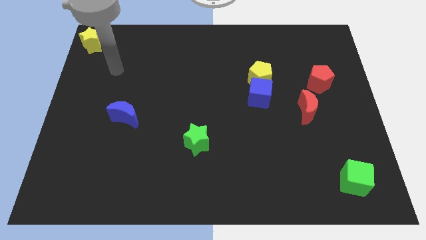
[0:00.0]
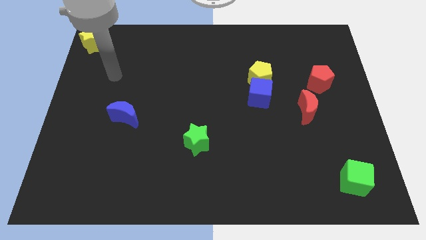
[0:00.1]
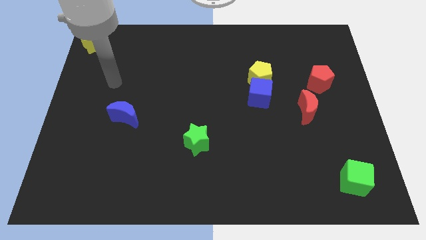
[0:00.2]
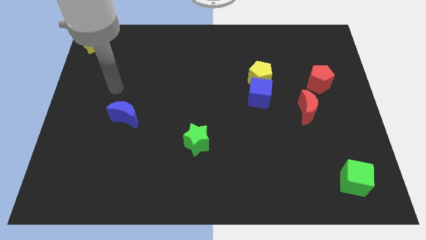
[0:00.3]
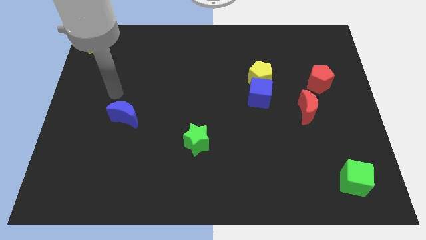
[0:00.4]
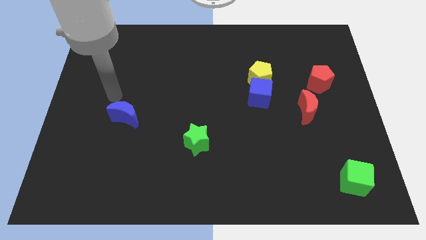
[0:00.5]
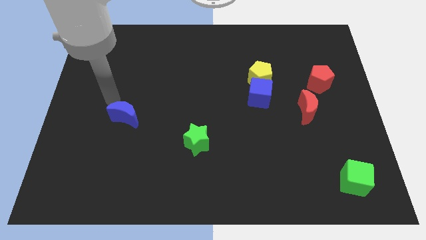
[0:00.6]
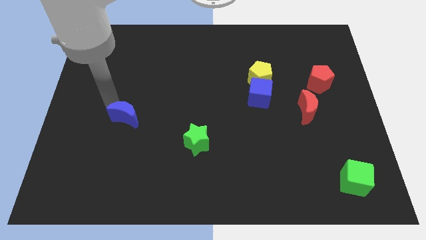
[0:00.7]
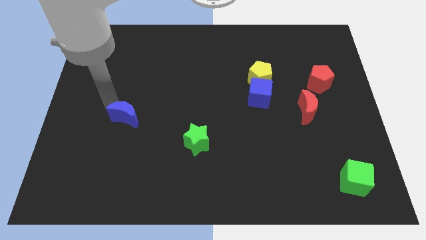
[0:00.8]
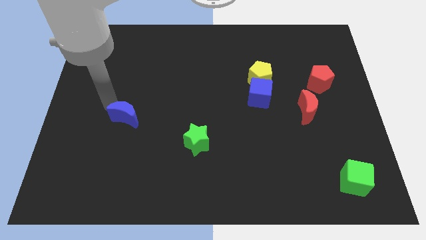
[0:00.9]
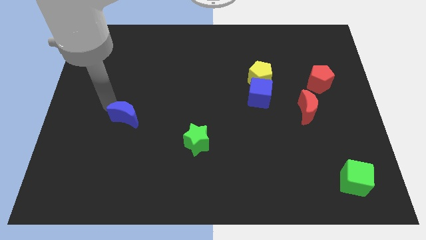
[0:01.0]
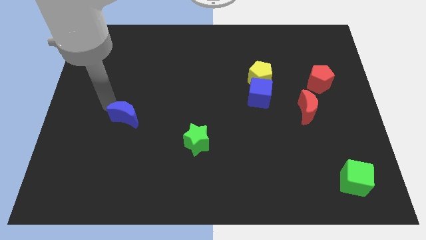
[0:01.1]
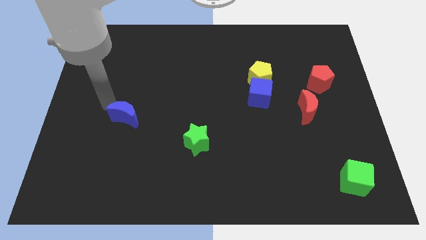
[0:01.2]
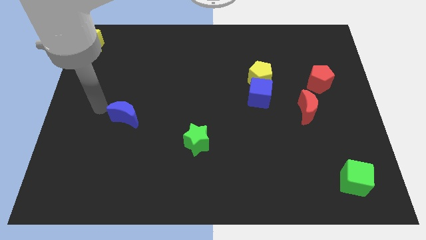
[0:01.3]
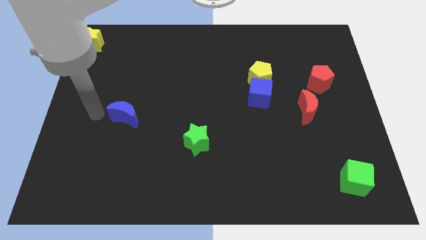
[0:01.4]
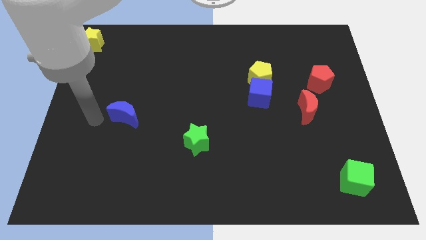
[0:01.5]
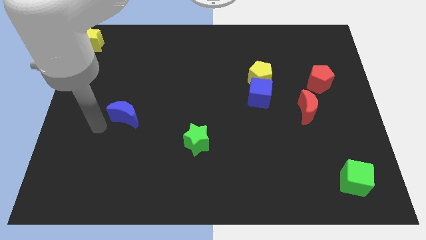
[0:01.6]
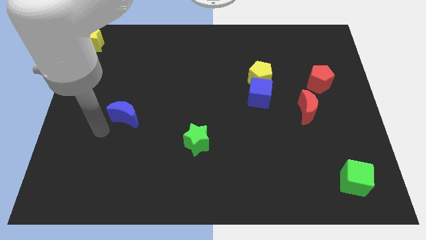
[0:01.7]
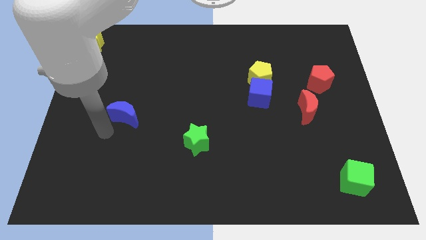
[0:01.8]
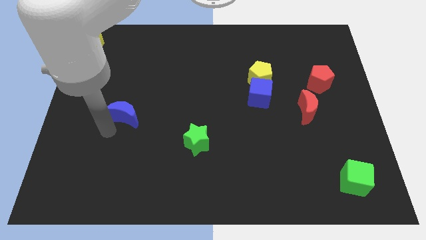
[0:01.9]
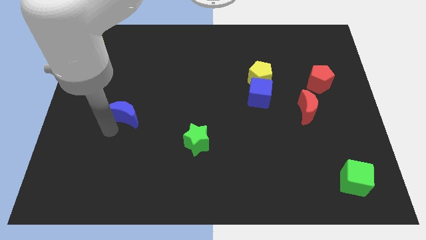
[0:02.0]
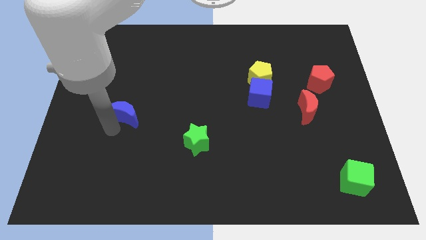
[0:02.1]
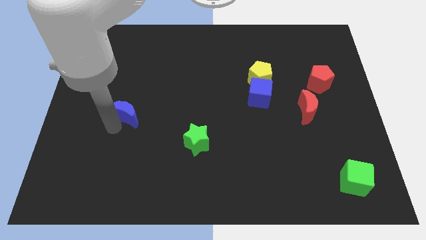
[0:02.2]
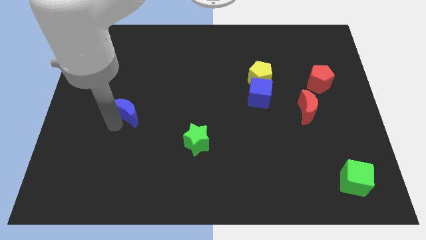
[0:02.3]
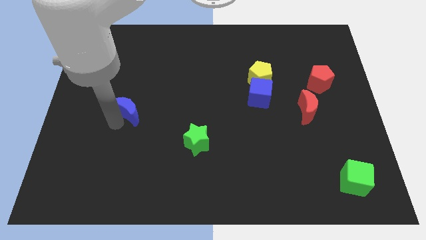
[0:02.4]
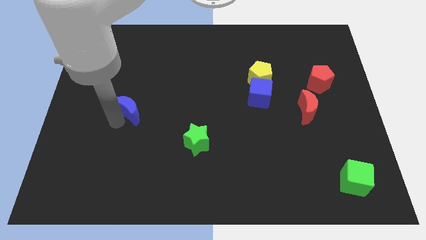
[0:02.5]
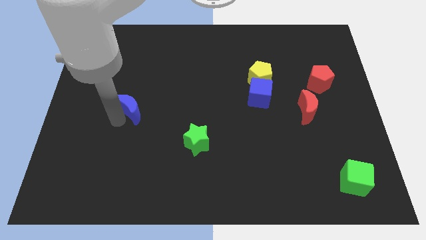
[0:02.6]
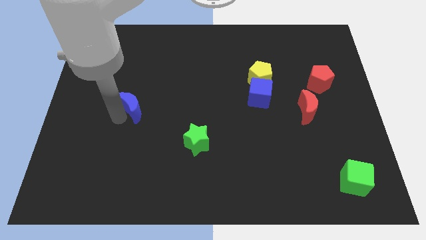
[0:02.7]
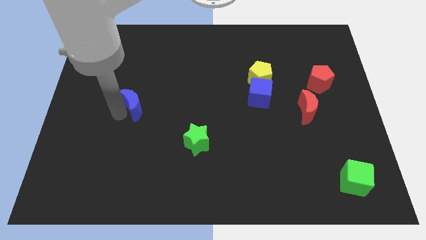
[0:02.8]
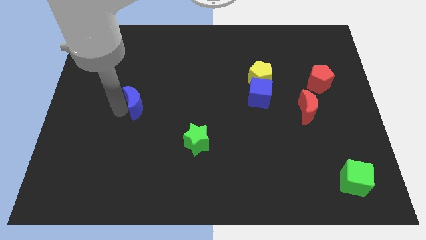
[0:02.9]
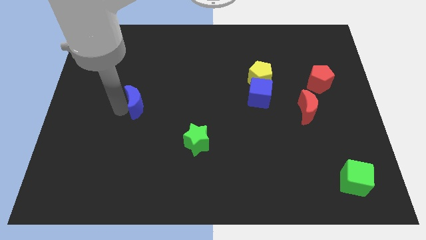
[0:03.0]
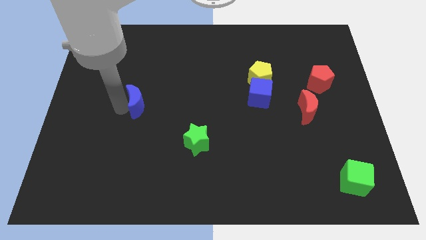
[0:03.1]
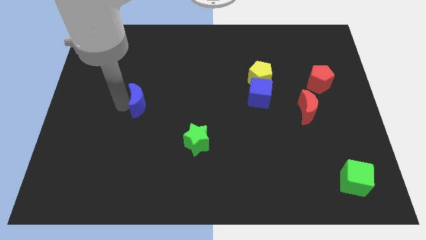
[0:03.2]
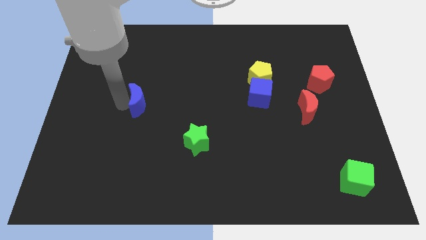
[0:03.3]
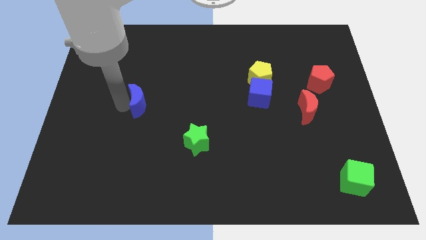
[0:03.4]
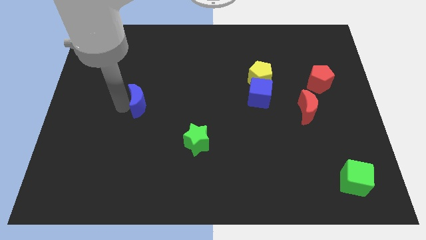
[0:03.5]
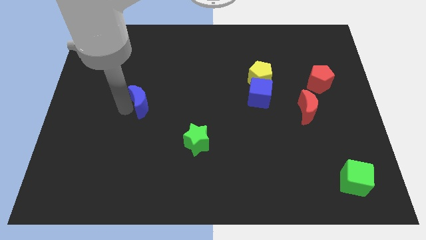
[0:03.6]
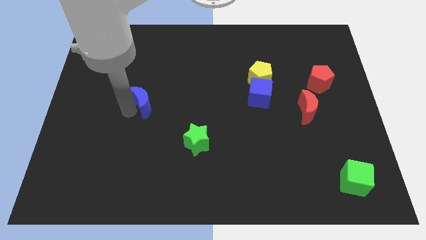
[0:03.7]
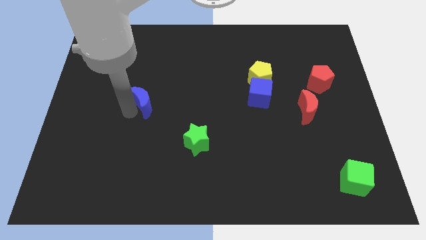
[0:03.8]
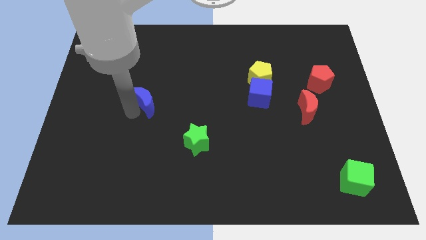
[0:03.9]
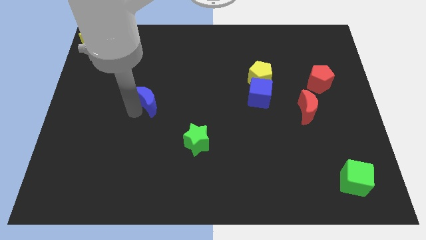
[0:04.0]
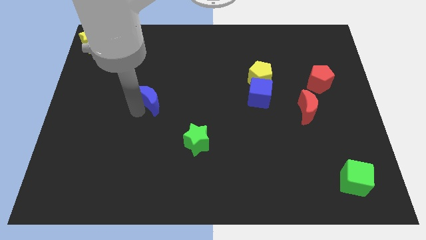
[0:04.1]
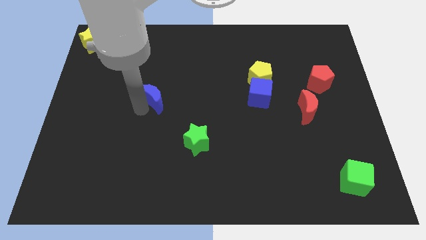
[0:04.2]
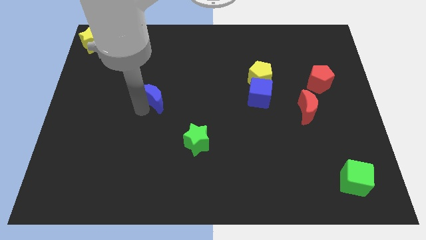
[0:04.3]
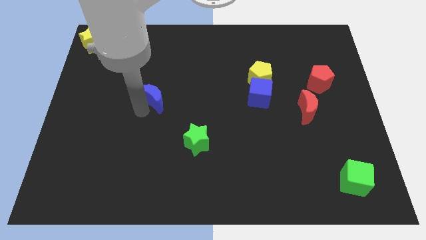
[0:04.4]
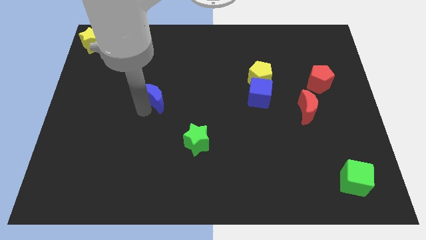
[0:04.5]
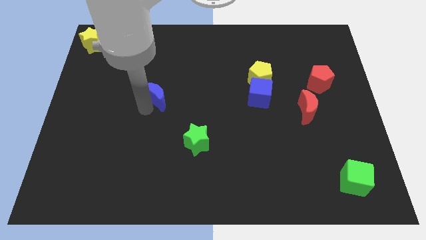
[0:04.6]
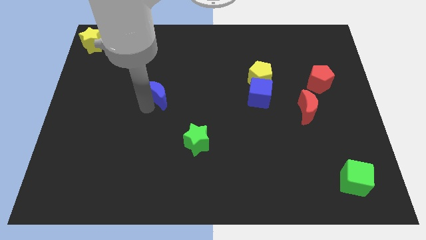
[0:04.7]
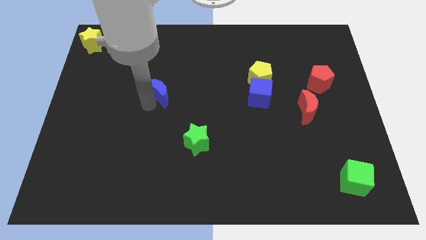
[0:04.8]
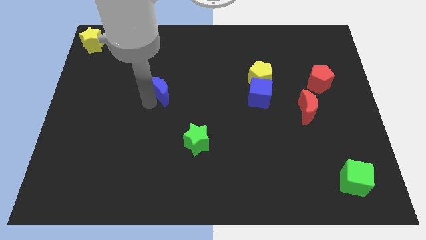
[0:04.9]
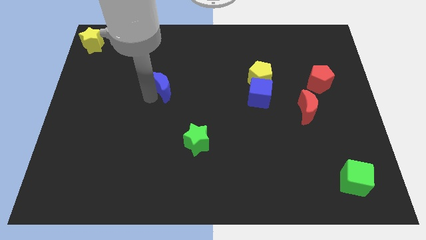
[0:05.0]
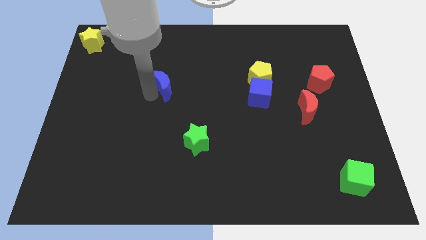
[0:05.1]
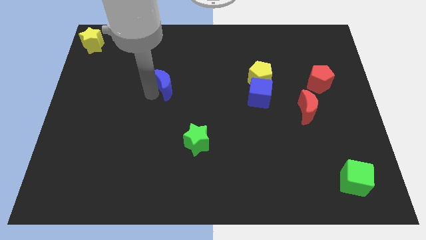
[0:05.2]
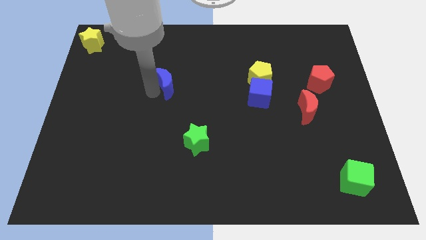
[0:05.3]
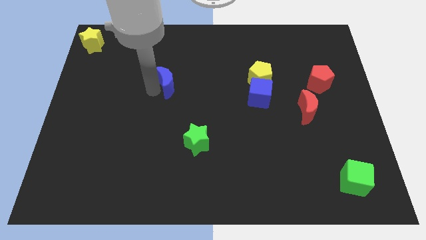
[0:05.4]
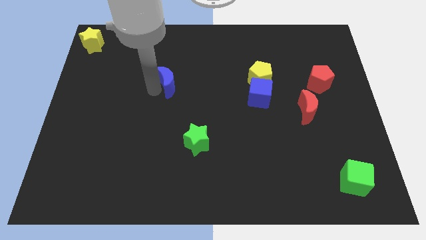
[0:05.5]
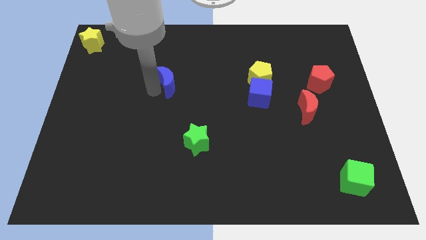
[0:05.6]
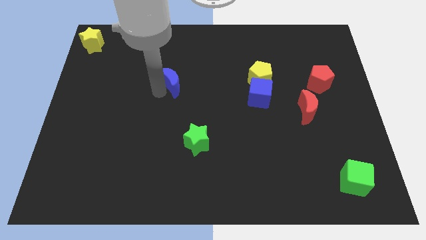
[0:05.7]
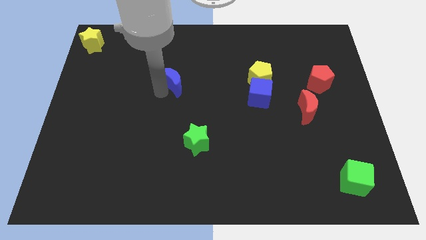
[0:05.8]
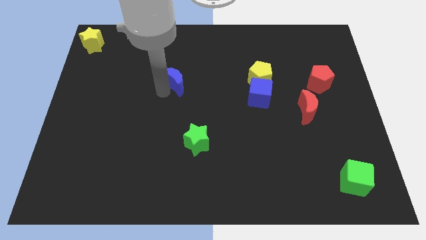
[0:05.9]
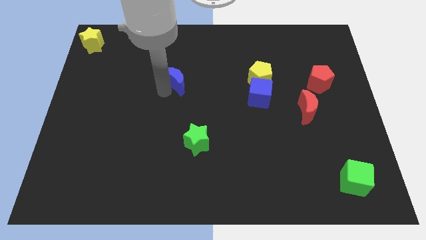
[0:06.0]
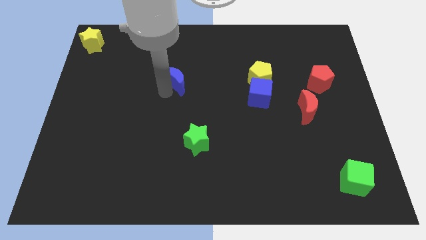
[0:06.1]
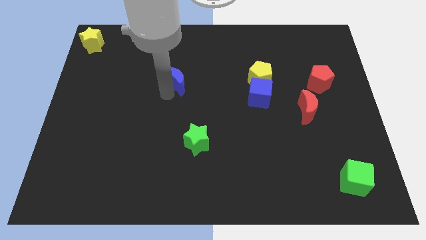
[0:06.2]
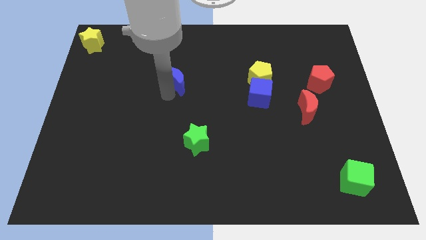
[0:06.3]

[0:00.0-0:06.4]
push the blue crescent to the top of the board

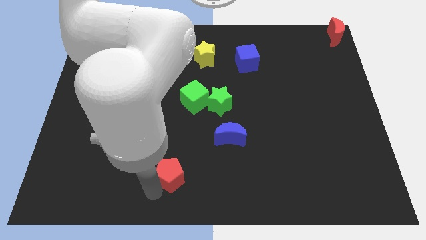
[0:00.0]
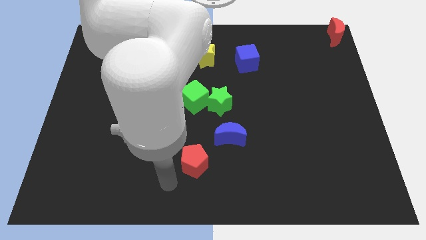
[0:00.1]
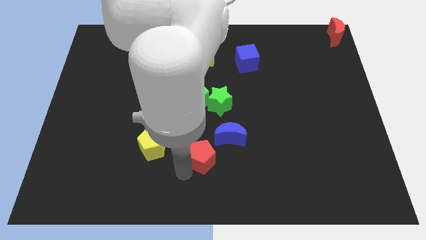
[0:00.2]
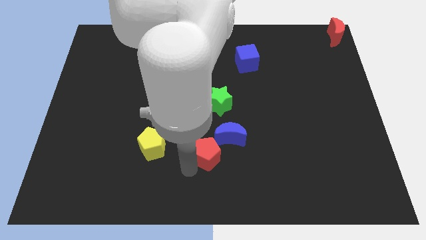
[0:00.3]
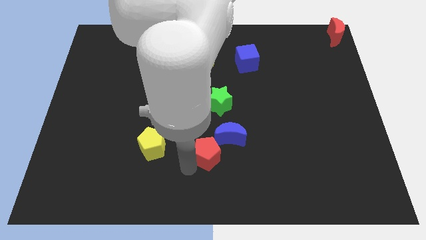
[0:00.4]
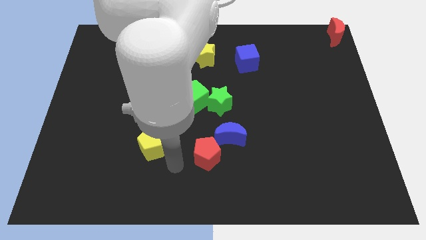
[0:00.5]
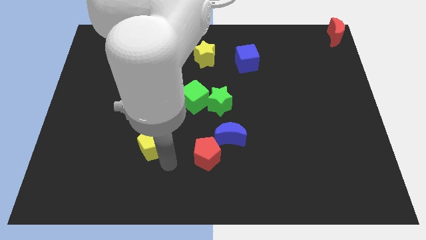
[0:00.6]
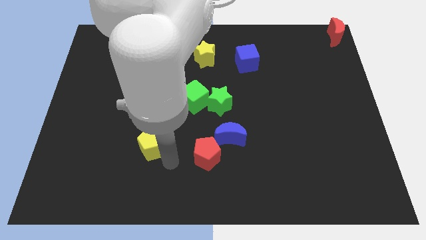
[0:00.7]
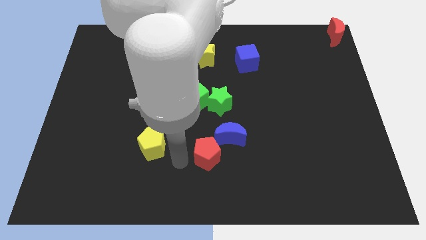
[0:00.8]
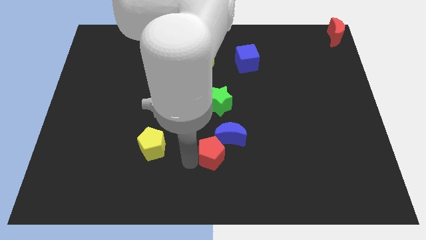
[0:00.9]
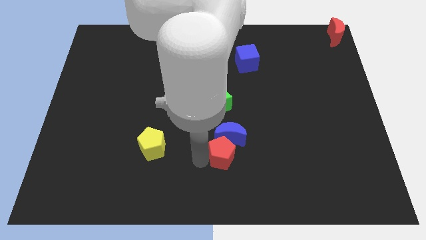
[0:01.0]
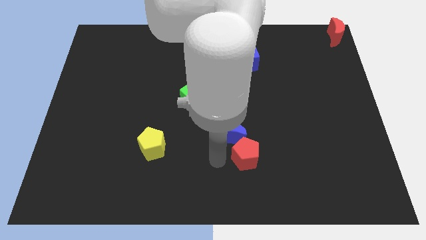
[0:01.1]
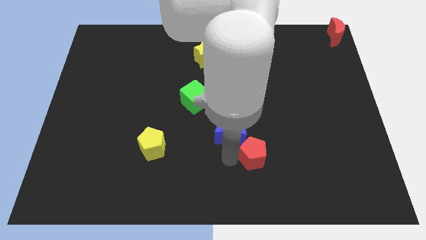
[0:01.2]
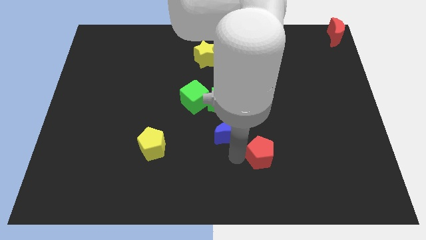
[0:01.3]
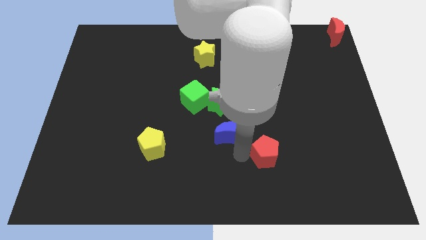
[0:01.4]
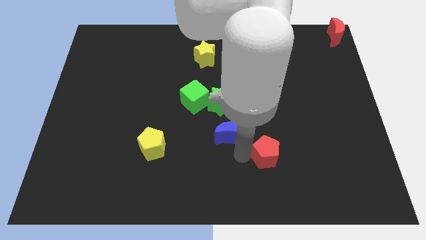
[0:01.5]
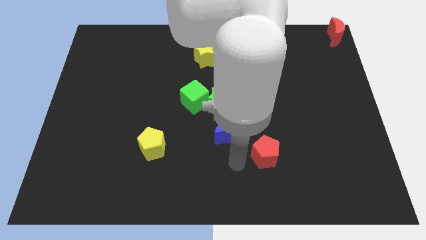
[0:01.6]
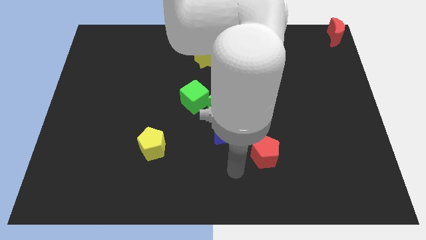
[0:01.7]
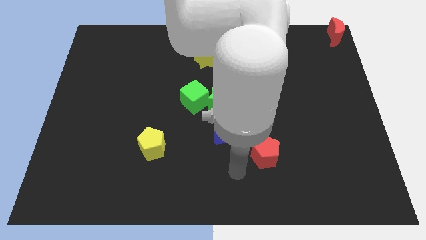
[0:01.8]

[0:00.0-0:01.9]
slide the red pentagon to the right

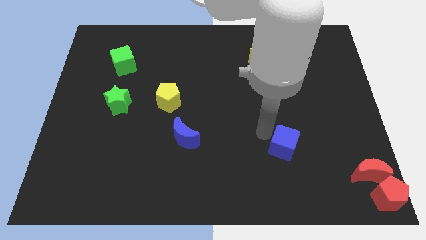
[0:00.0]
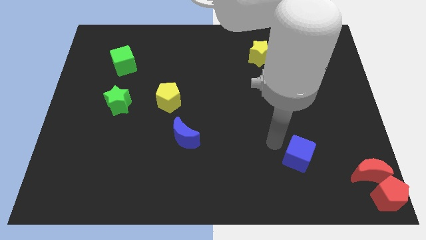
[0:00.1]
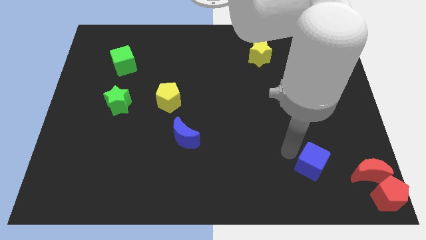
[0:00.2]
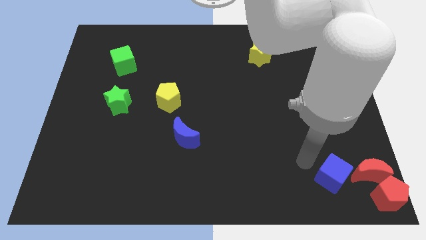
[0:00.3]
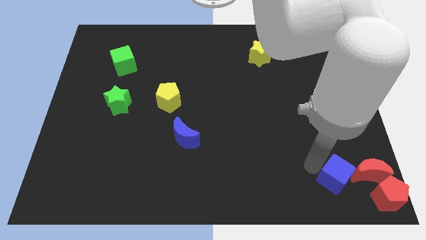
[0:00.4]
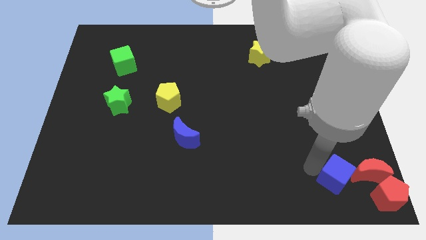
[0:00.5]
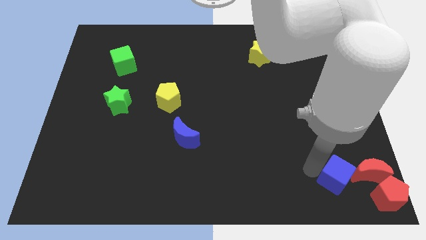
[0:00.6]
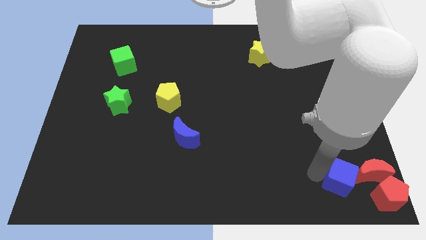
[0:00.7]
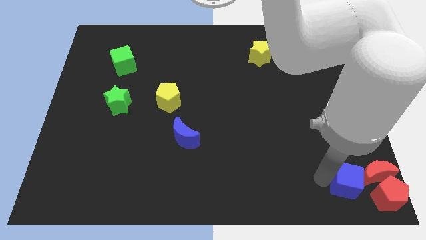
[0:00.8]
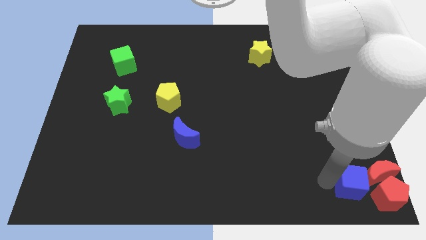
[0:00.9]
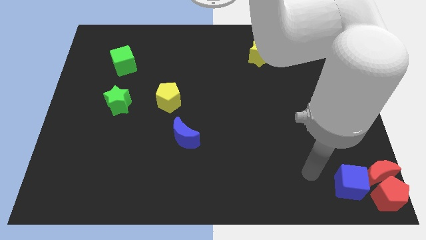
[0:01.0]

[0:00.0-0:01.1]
move the blue cube to the left of the red blocks
